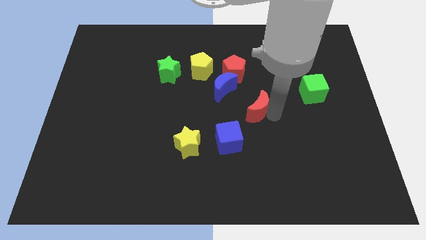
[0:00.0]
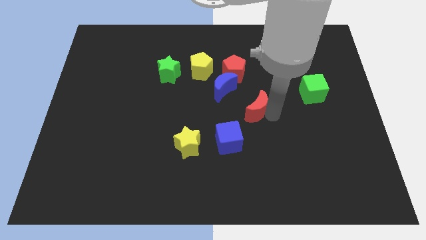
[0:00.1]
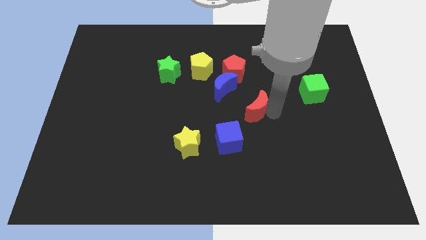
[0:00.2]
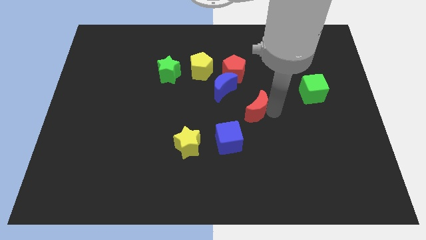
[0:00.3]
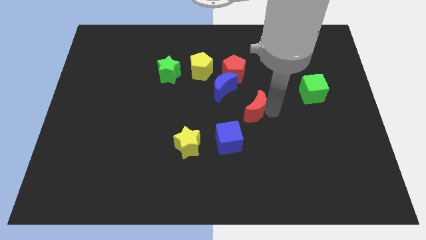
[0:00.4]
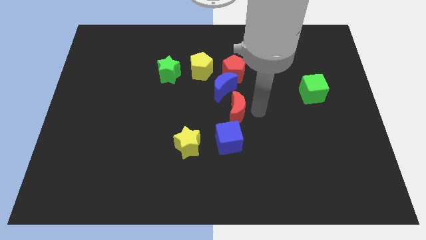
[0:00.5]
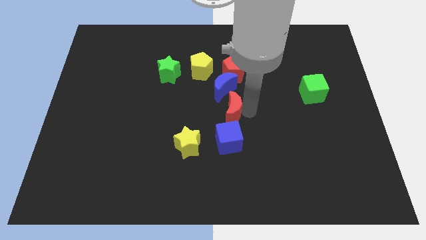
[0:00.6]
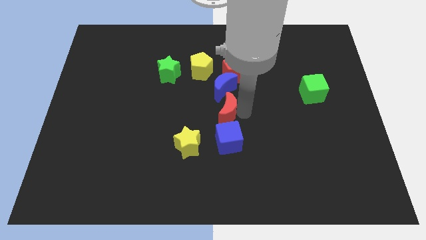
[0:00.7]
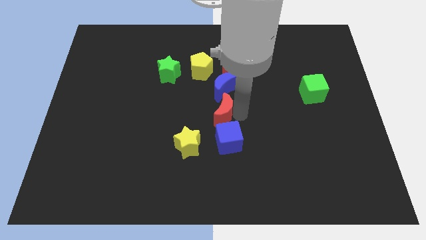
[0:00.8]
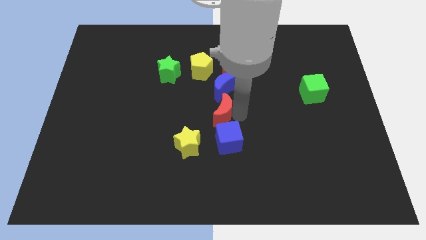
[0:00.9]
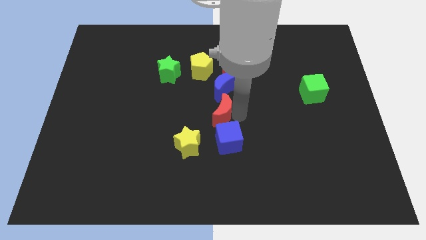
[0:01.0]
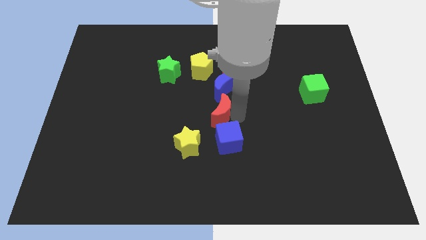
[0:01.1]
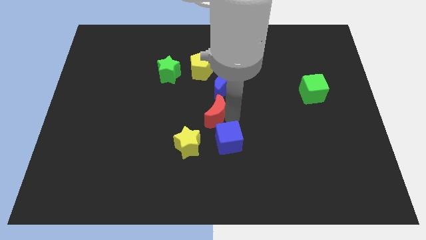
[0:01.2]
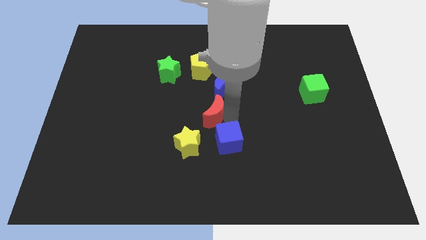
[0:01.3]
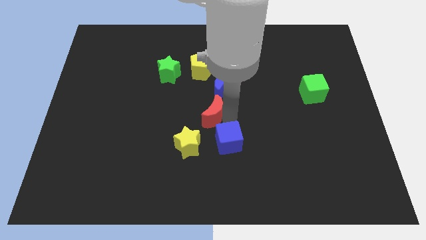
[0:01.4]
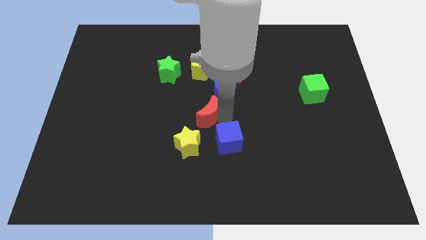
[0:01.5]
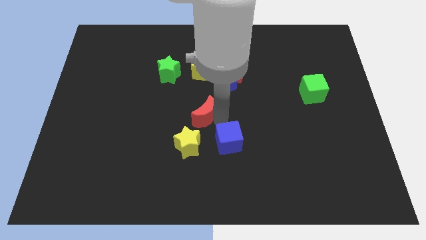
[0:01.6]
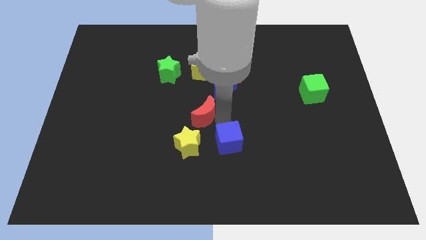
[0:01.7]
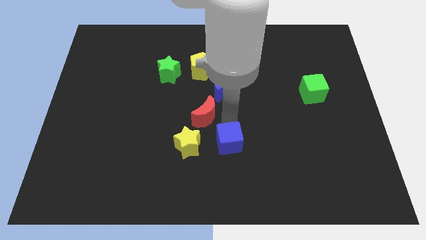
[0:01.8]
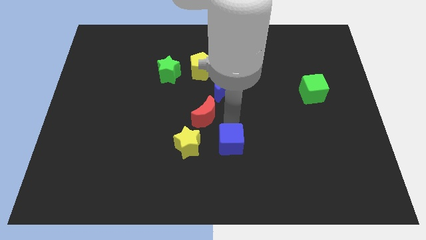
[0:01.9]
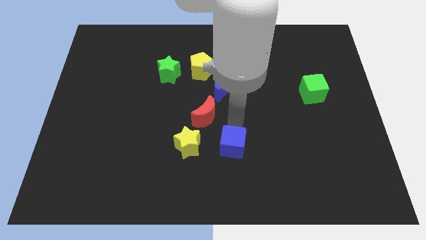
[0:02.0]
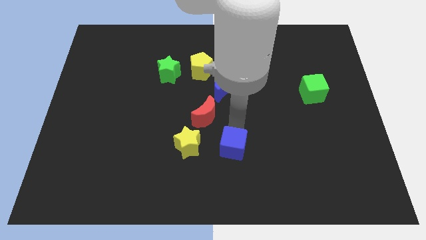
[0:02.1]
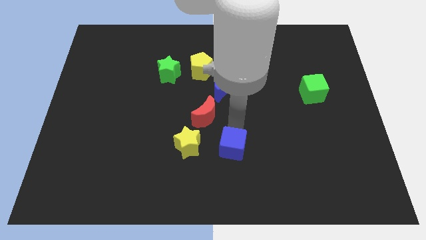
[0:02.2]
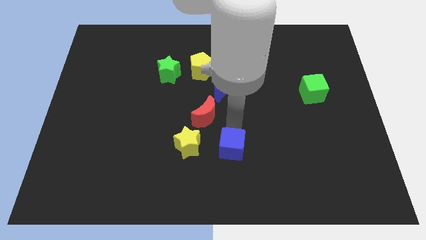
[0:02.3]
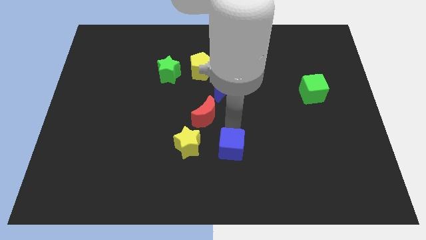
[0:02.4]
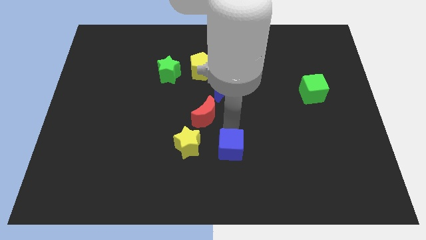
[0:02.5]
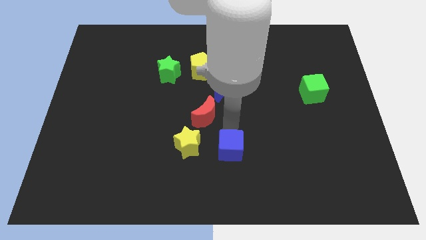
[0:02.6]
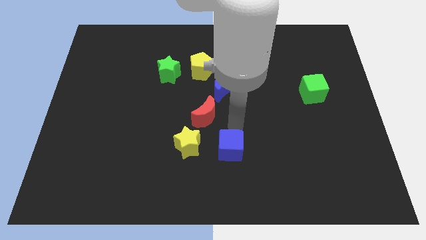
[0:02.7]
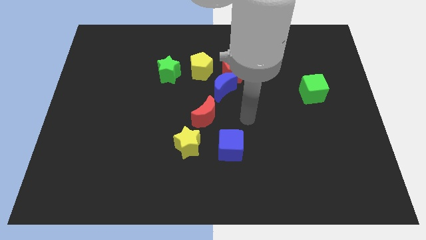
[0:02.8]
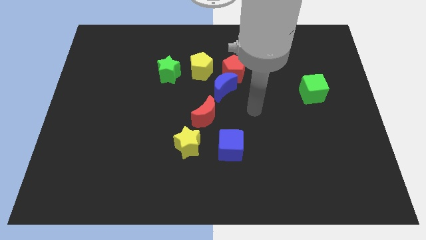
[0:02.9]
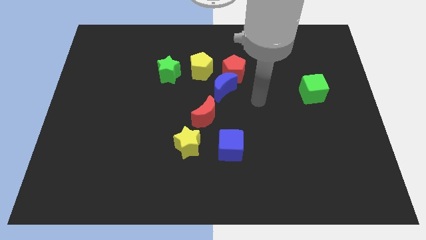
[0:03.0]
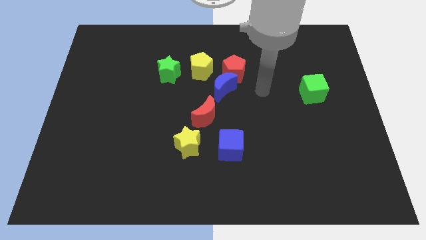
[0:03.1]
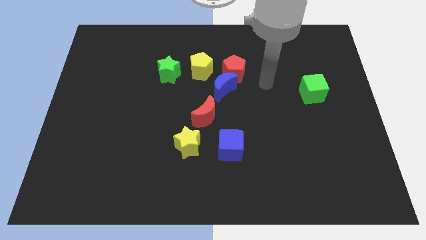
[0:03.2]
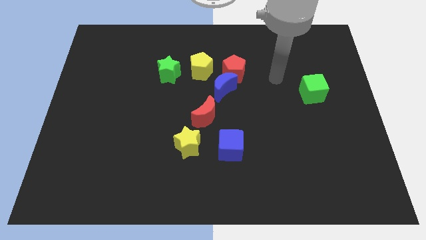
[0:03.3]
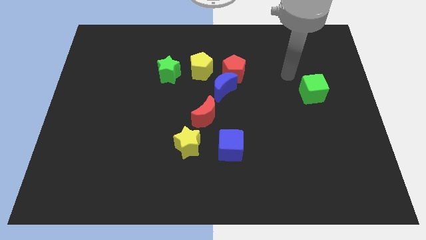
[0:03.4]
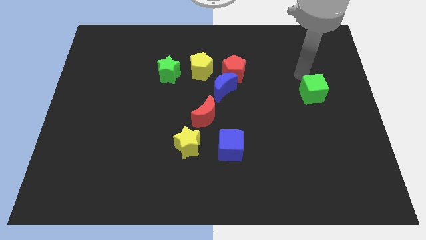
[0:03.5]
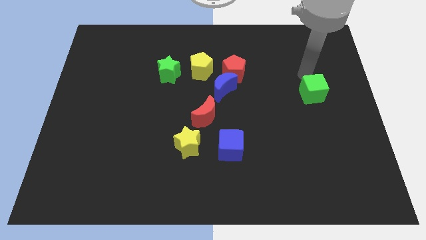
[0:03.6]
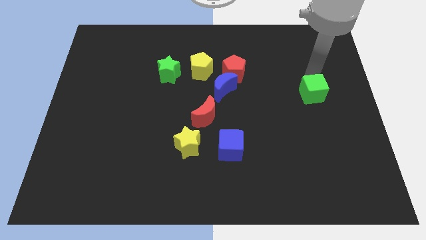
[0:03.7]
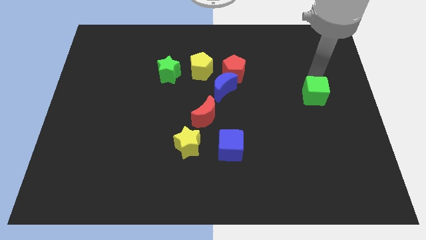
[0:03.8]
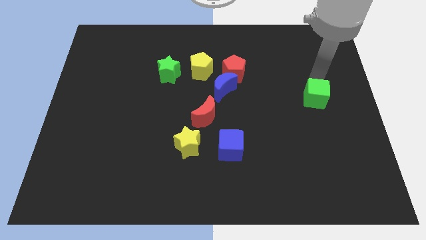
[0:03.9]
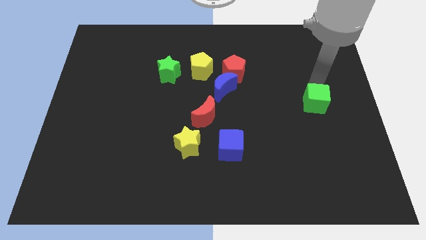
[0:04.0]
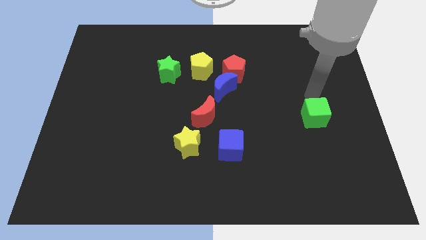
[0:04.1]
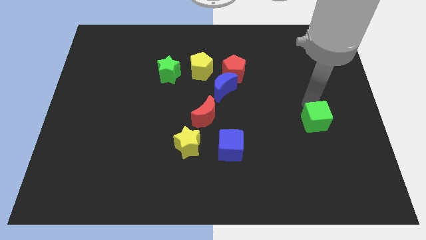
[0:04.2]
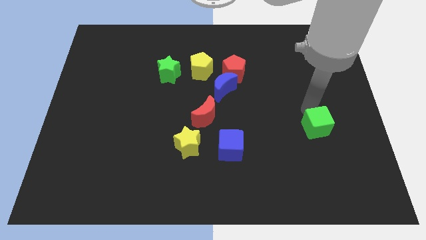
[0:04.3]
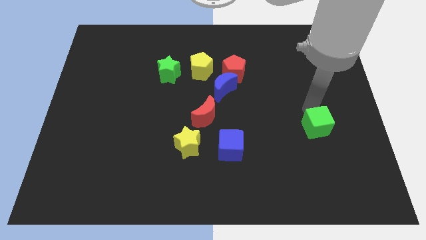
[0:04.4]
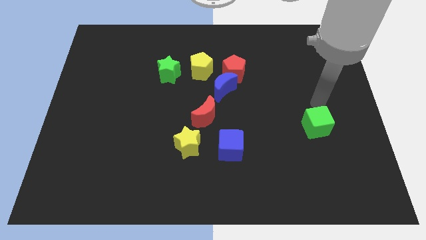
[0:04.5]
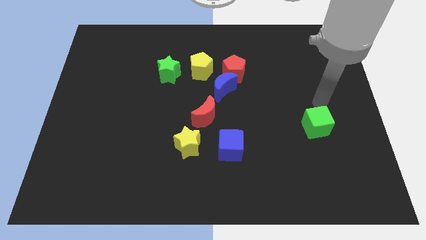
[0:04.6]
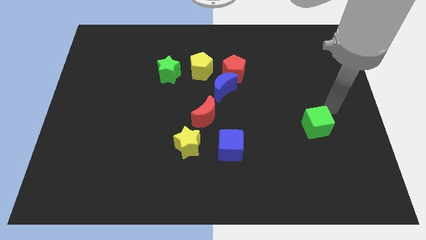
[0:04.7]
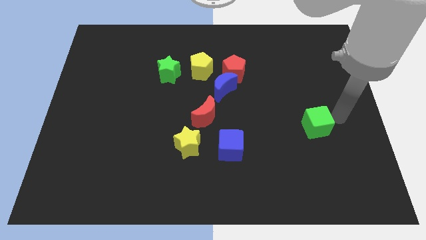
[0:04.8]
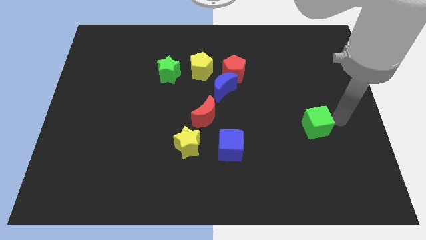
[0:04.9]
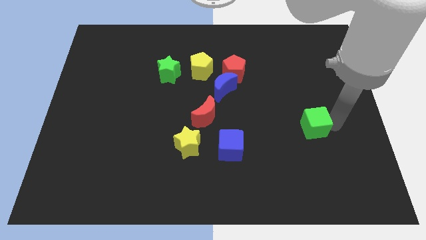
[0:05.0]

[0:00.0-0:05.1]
push the blue cube and green cube towards down side

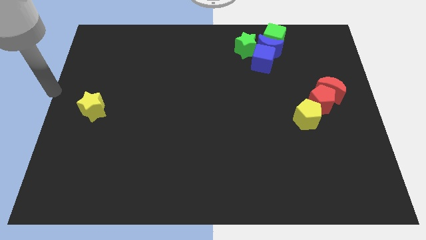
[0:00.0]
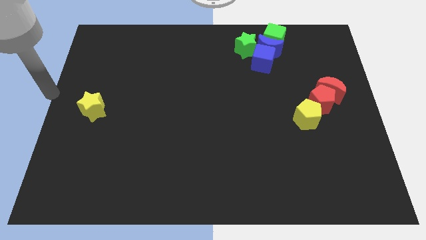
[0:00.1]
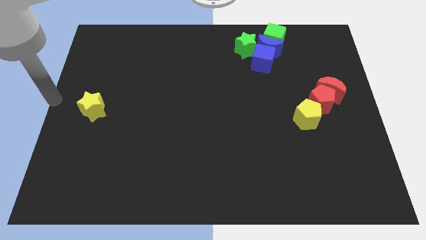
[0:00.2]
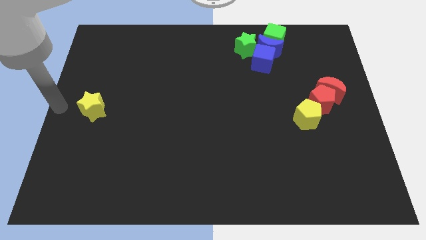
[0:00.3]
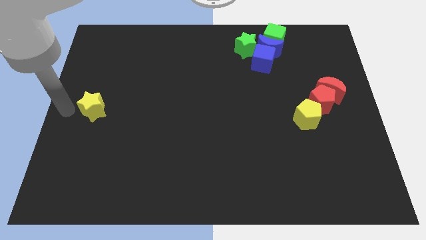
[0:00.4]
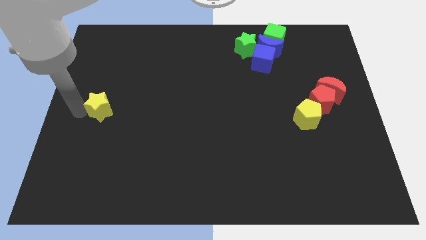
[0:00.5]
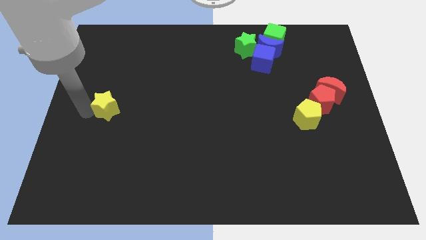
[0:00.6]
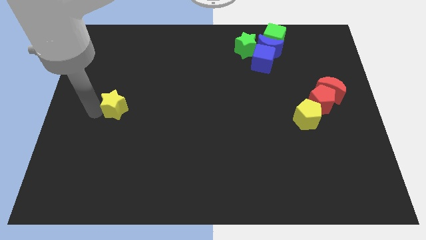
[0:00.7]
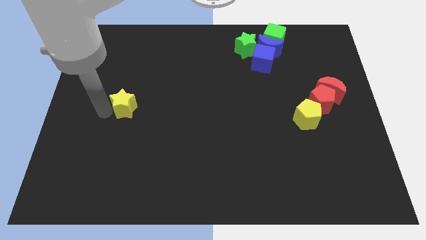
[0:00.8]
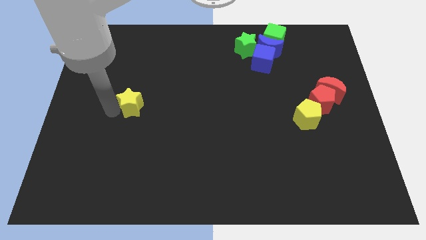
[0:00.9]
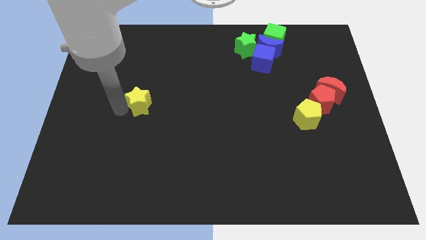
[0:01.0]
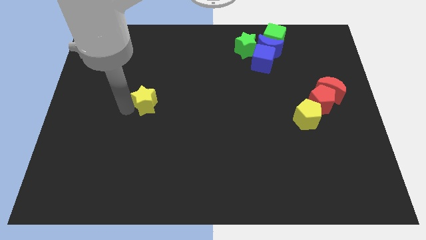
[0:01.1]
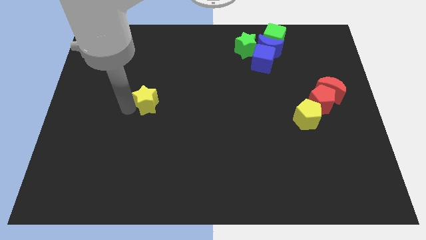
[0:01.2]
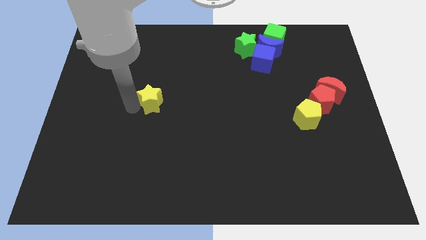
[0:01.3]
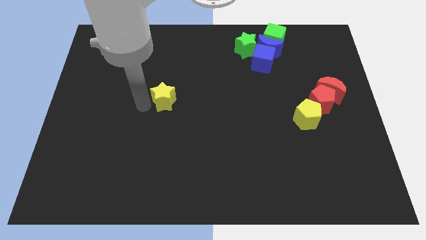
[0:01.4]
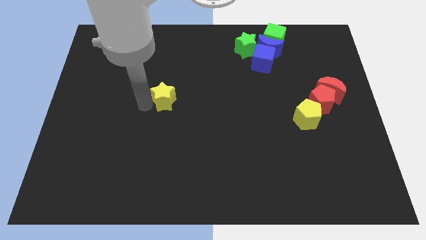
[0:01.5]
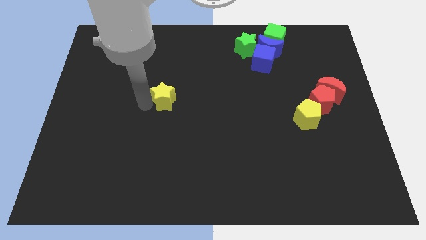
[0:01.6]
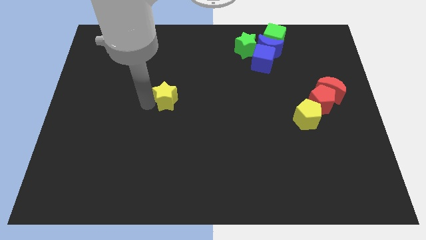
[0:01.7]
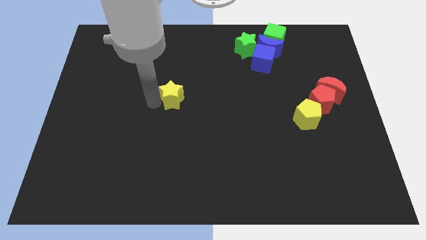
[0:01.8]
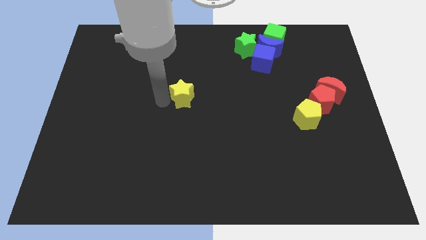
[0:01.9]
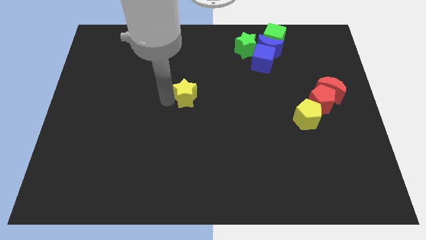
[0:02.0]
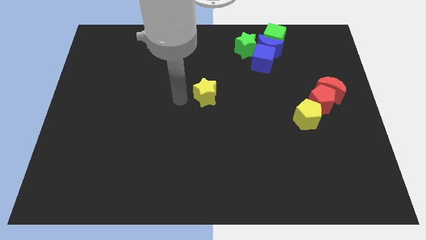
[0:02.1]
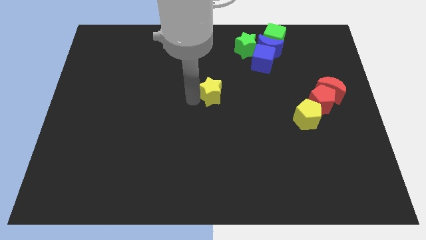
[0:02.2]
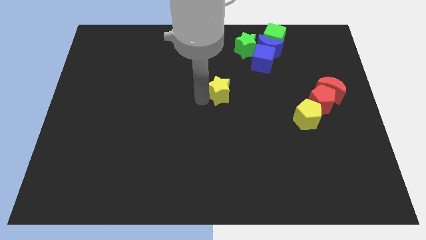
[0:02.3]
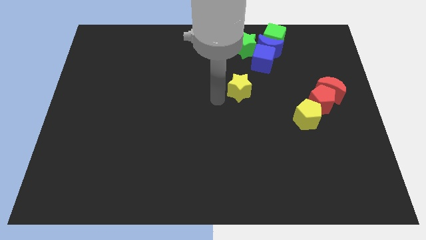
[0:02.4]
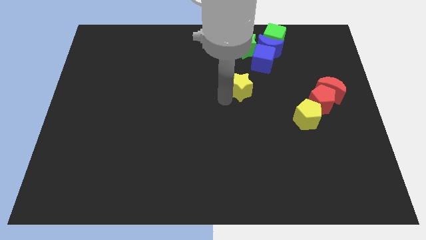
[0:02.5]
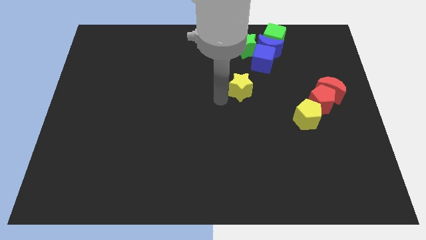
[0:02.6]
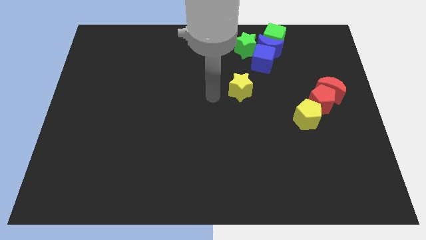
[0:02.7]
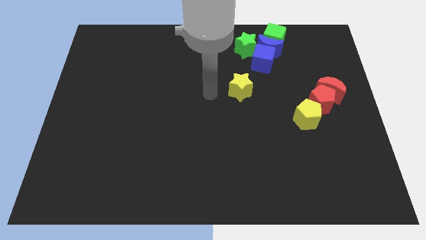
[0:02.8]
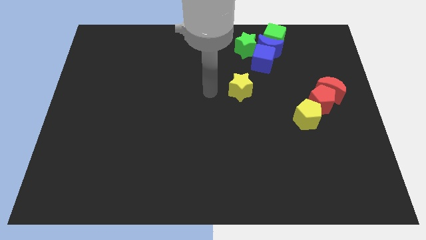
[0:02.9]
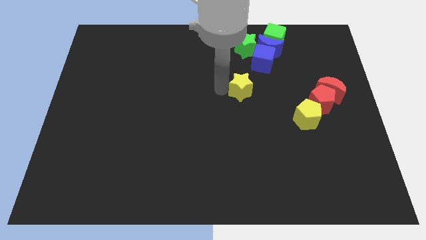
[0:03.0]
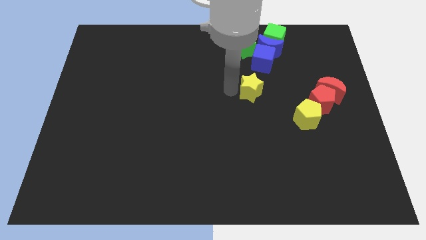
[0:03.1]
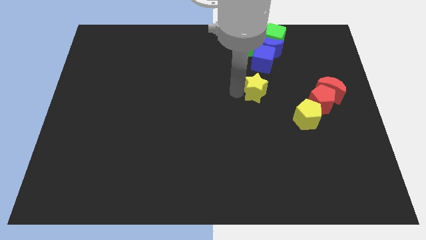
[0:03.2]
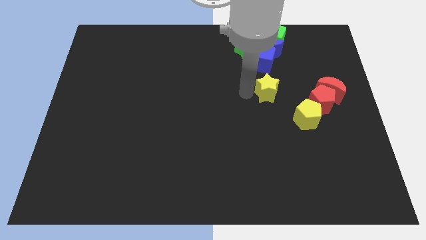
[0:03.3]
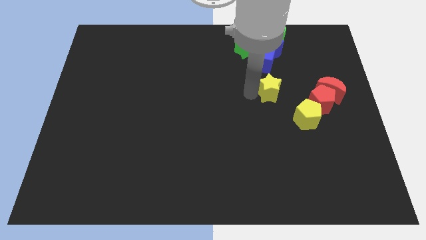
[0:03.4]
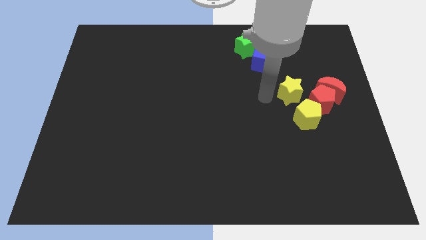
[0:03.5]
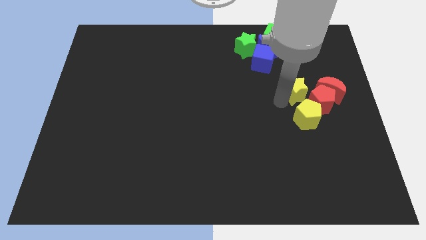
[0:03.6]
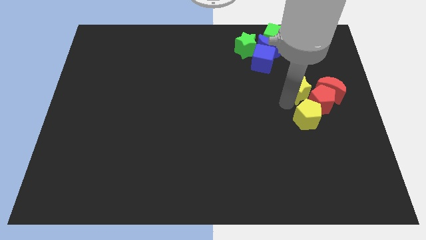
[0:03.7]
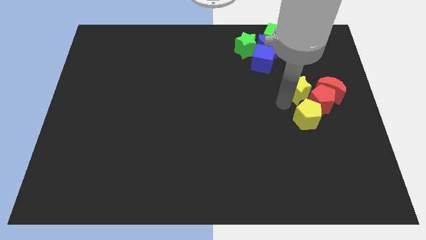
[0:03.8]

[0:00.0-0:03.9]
push the yellow star top of the yellow pentagon

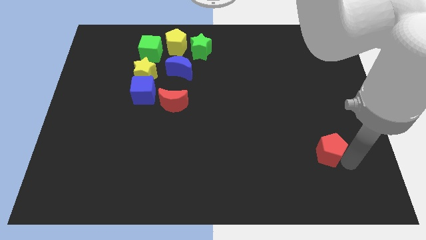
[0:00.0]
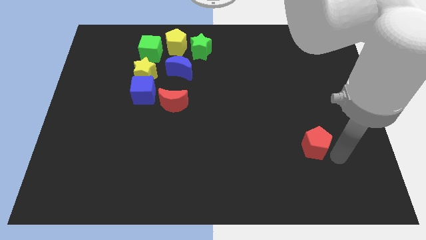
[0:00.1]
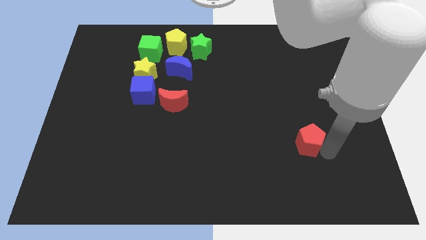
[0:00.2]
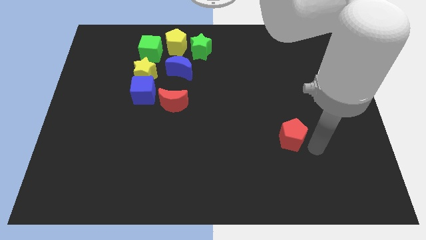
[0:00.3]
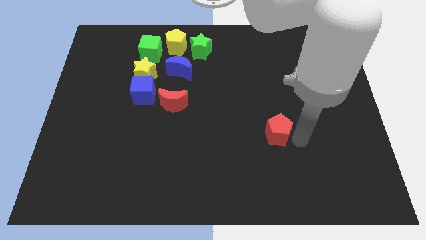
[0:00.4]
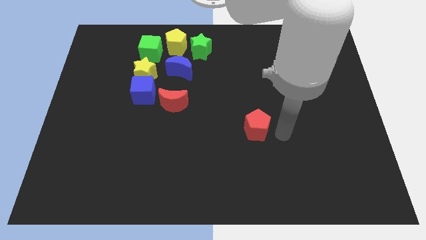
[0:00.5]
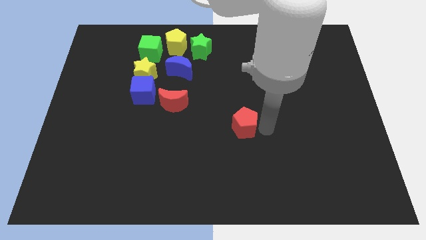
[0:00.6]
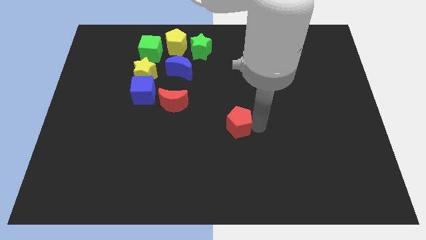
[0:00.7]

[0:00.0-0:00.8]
place the red pentagon to the middle of the board
